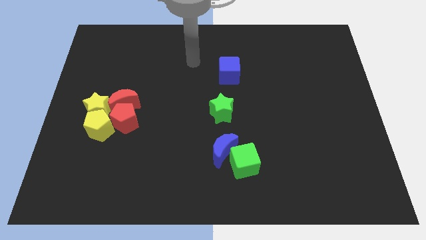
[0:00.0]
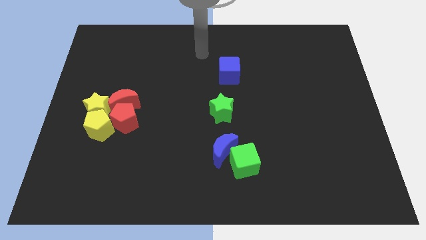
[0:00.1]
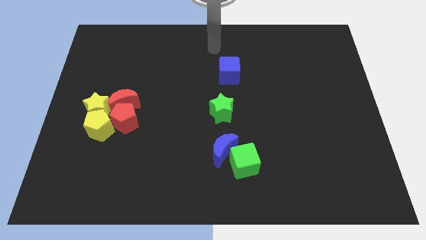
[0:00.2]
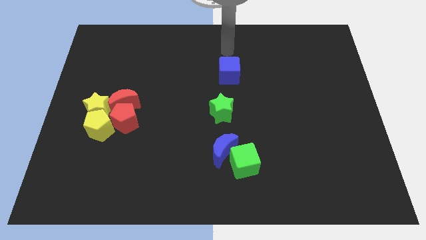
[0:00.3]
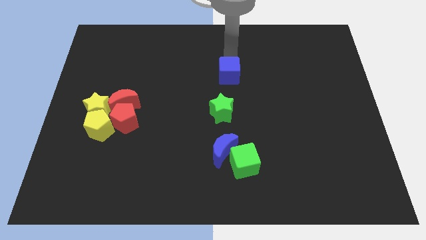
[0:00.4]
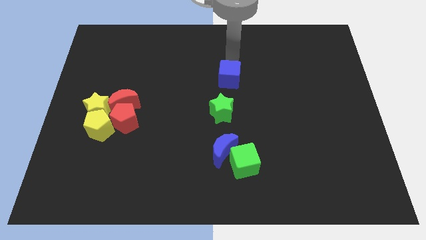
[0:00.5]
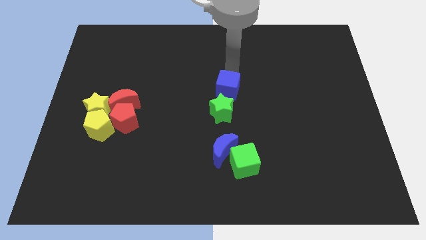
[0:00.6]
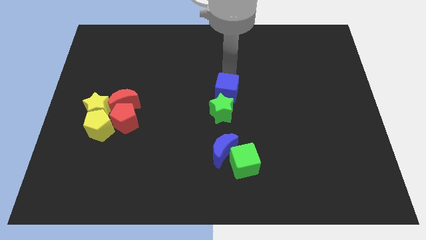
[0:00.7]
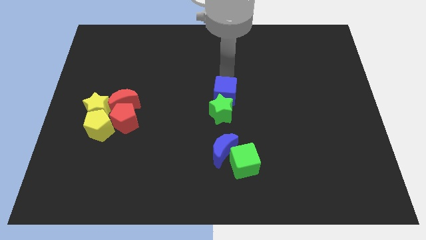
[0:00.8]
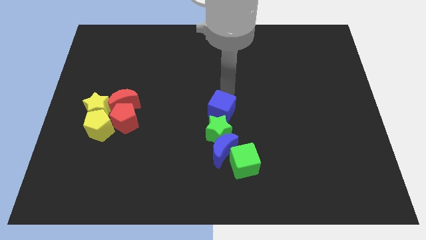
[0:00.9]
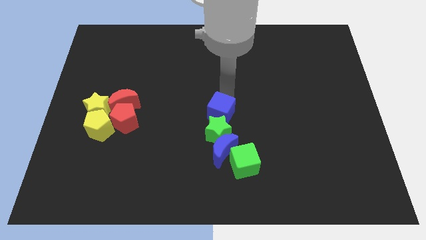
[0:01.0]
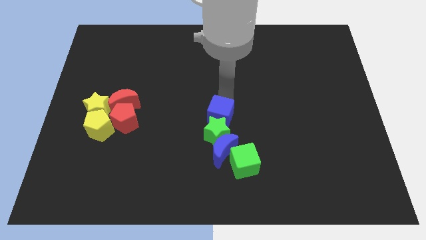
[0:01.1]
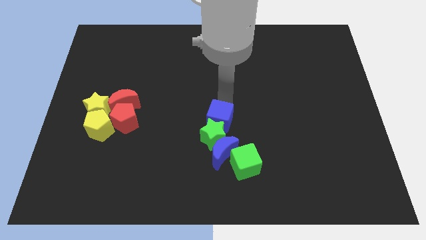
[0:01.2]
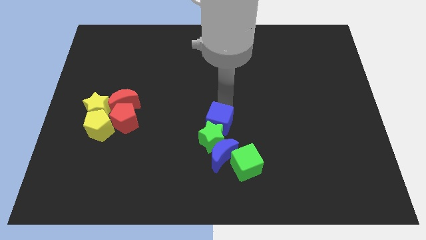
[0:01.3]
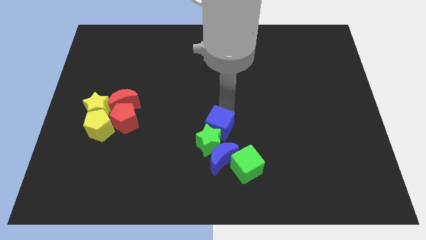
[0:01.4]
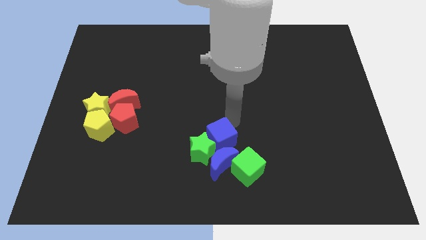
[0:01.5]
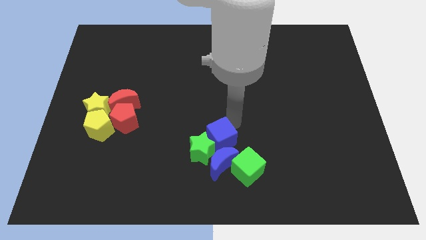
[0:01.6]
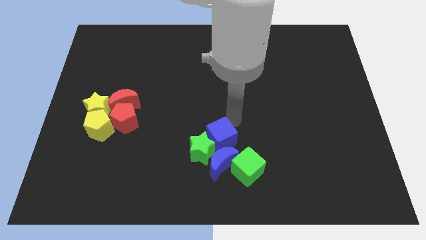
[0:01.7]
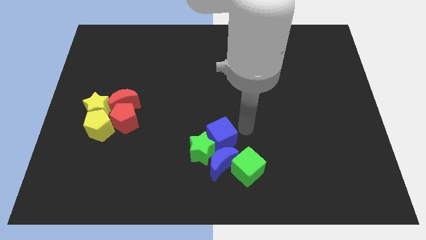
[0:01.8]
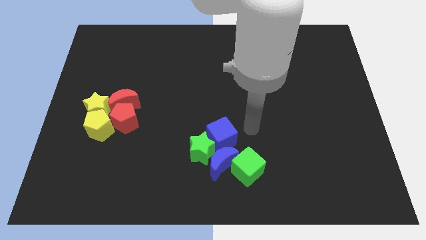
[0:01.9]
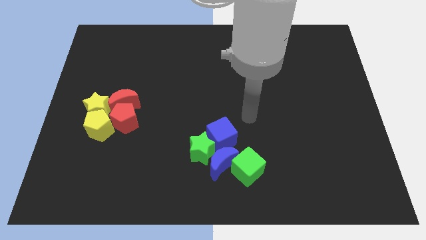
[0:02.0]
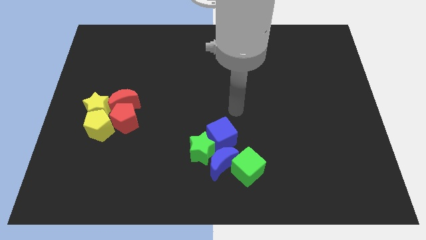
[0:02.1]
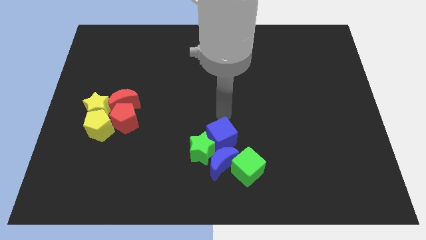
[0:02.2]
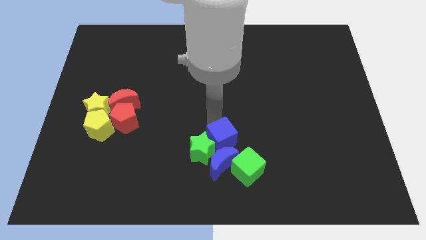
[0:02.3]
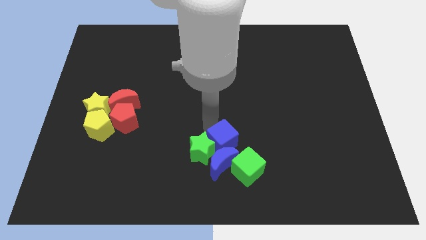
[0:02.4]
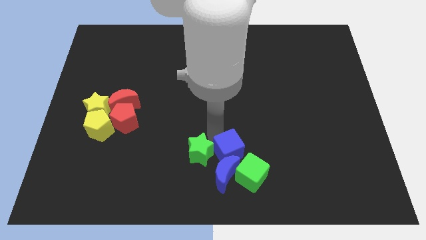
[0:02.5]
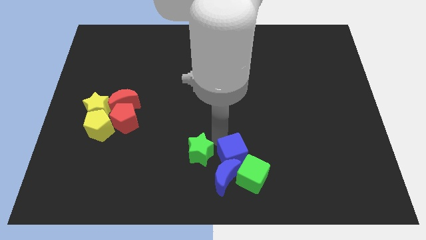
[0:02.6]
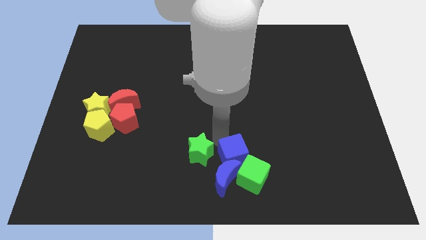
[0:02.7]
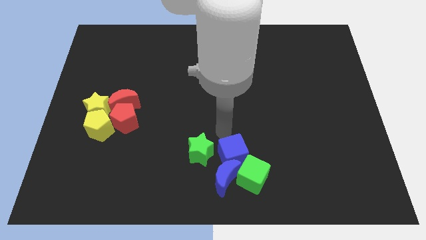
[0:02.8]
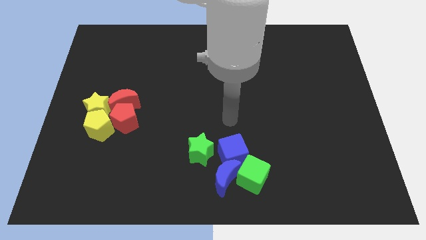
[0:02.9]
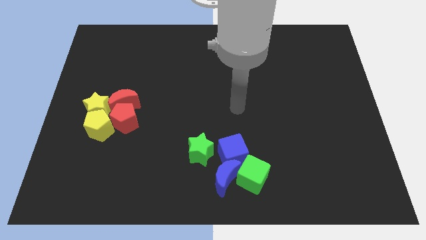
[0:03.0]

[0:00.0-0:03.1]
push the blue cube into the blue crescent

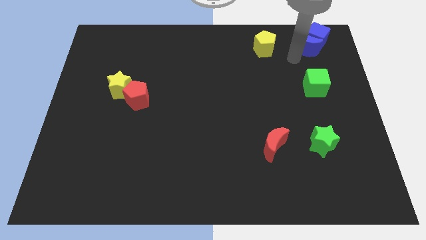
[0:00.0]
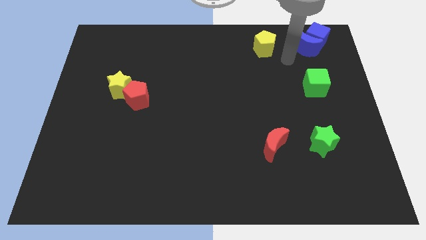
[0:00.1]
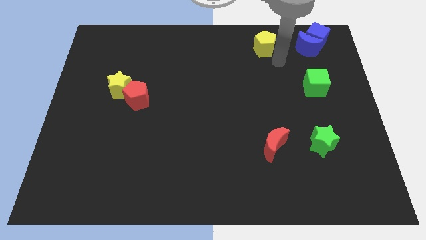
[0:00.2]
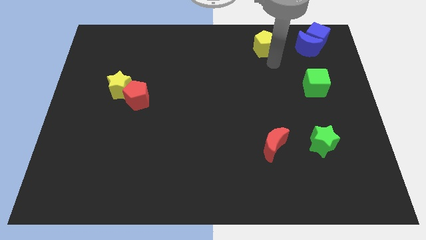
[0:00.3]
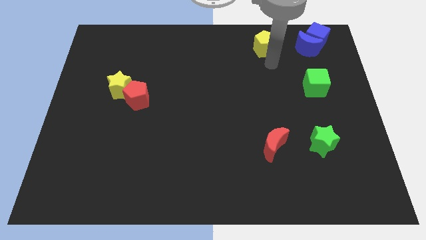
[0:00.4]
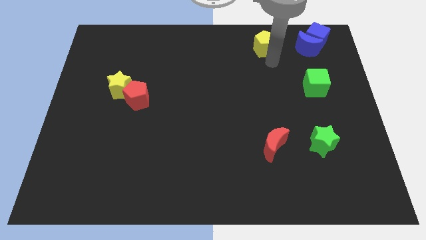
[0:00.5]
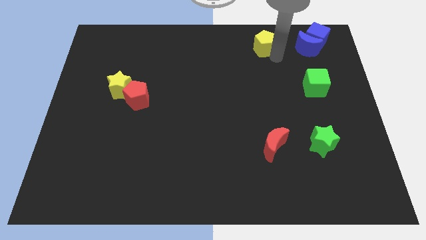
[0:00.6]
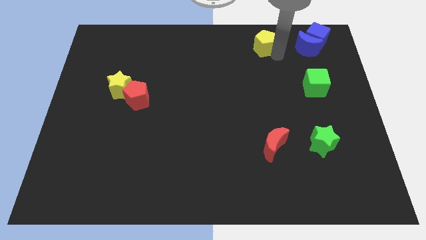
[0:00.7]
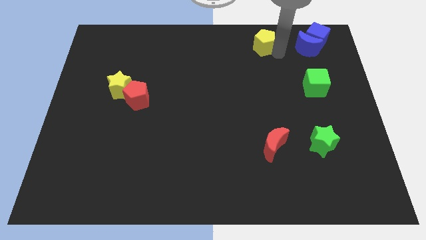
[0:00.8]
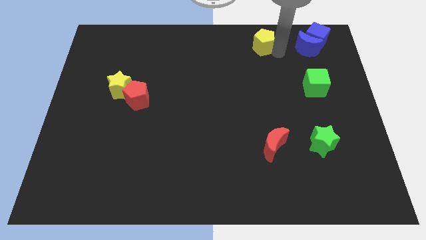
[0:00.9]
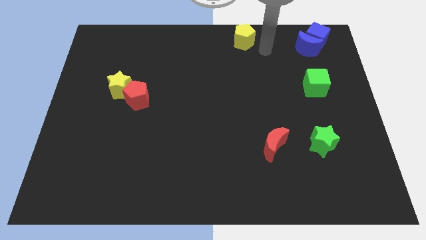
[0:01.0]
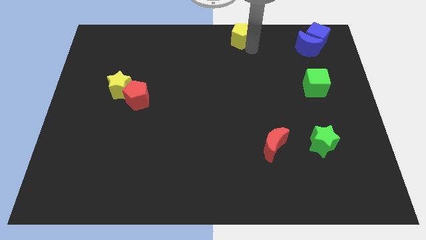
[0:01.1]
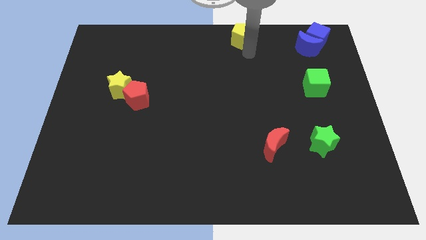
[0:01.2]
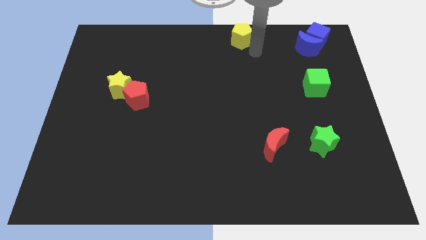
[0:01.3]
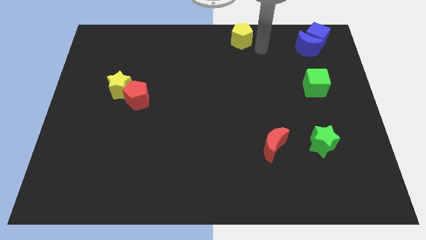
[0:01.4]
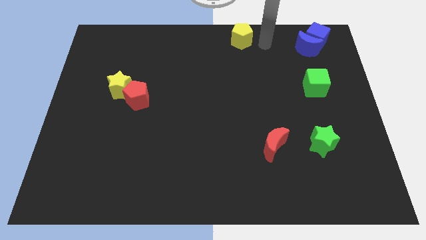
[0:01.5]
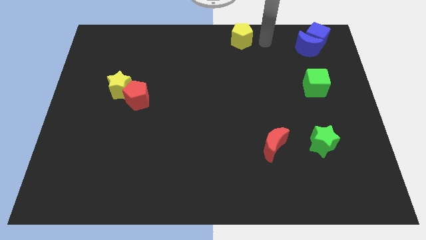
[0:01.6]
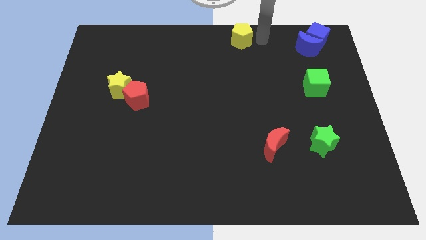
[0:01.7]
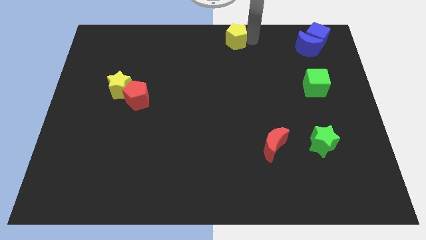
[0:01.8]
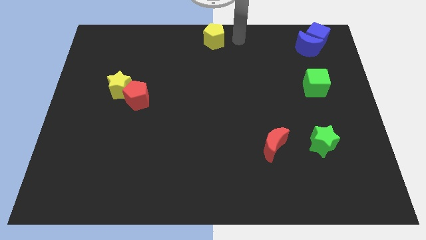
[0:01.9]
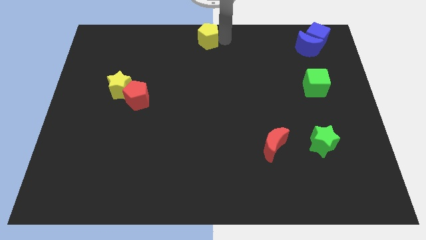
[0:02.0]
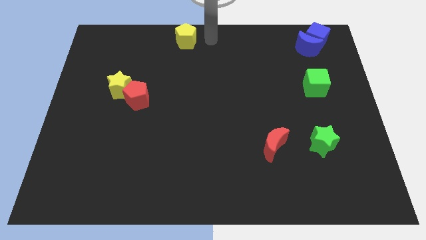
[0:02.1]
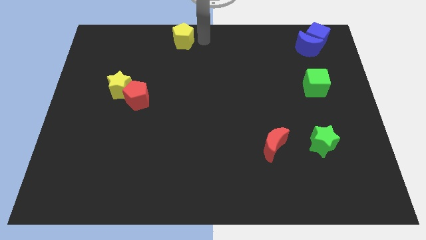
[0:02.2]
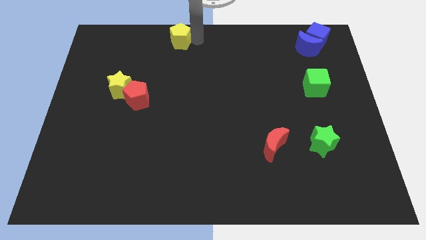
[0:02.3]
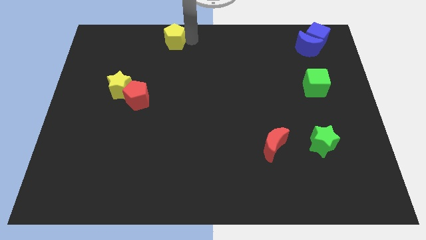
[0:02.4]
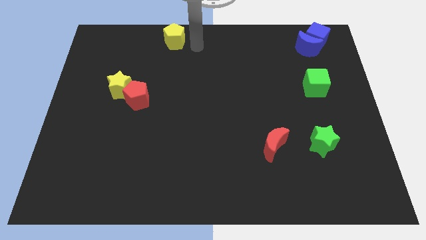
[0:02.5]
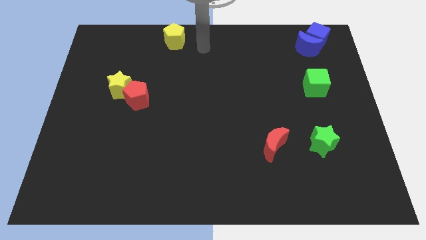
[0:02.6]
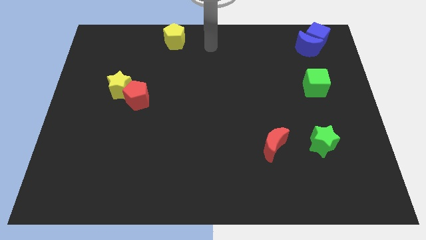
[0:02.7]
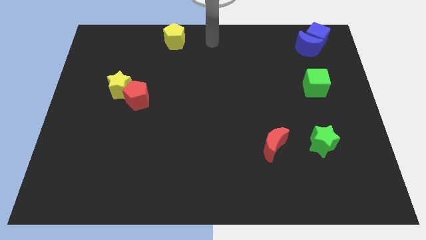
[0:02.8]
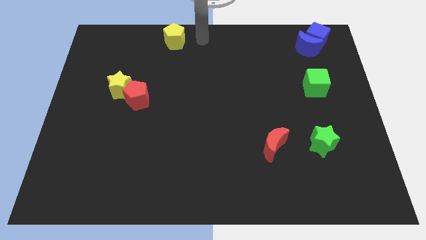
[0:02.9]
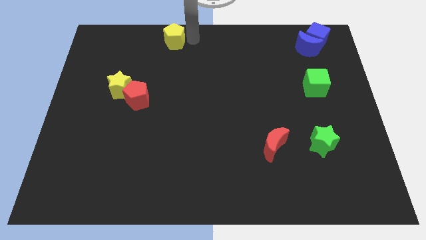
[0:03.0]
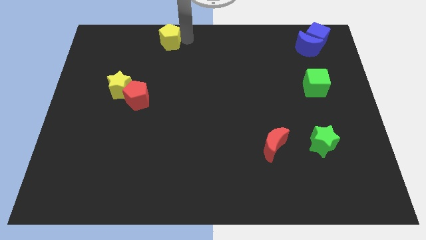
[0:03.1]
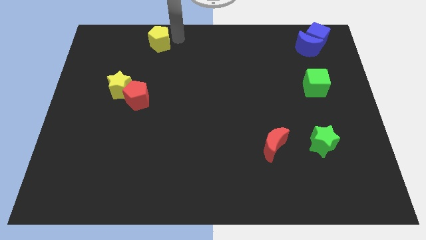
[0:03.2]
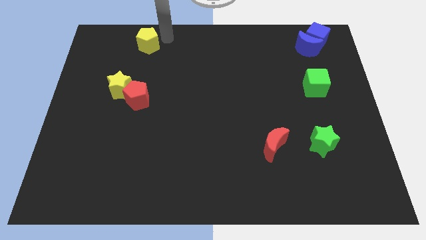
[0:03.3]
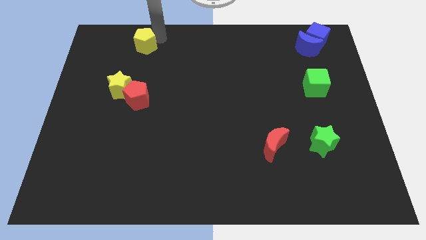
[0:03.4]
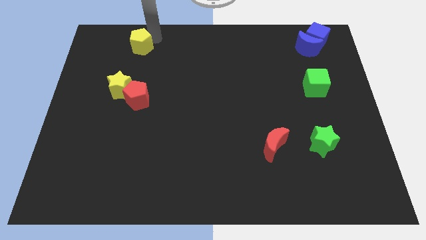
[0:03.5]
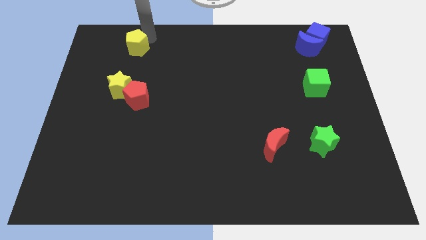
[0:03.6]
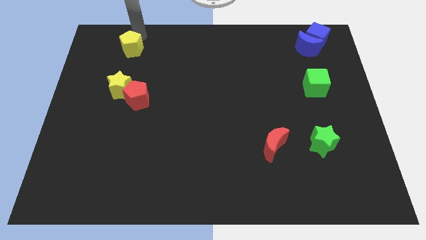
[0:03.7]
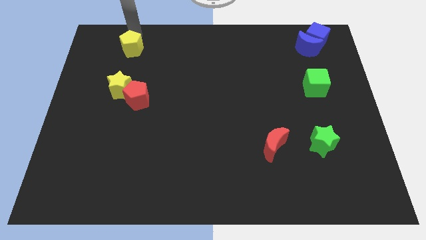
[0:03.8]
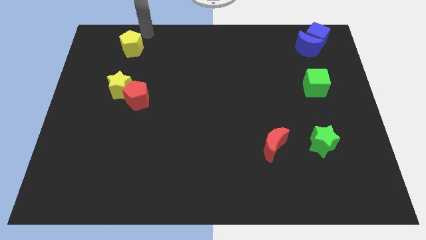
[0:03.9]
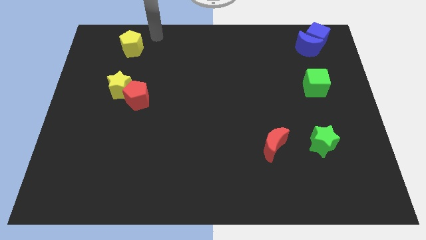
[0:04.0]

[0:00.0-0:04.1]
place yellow pentagon above the yellow star

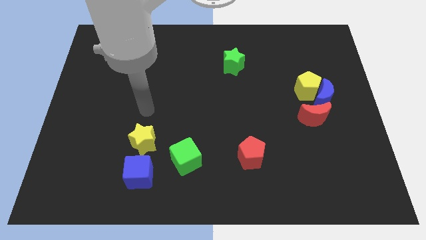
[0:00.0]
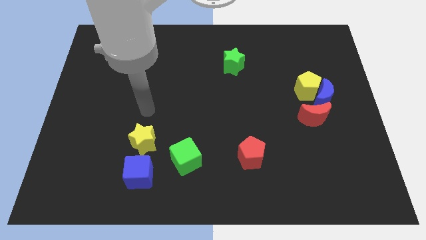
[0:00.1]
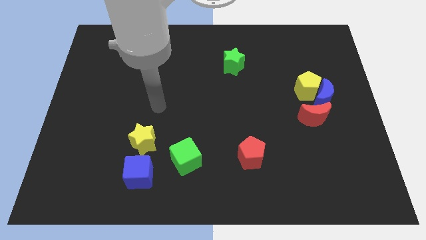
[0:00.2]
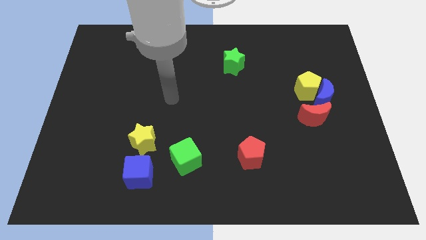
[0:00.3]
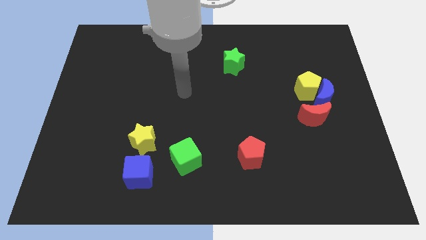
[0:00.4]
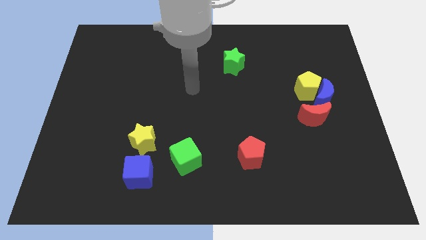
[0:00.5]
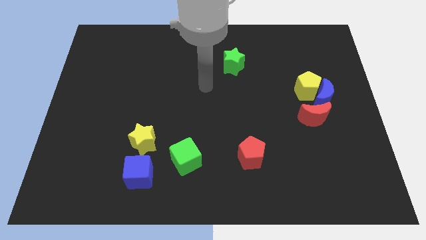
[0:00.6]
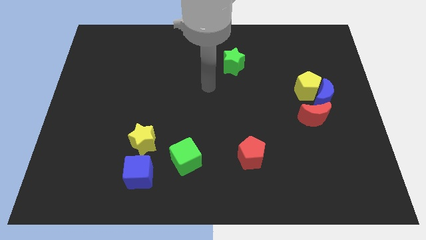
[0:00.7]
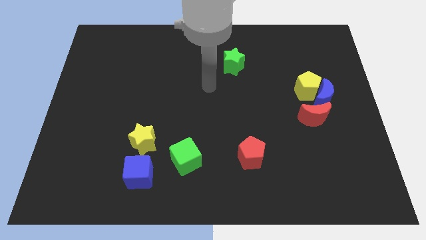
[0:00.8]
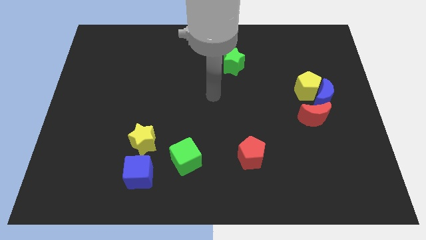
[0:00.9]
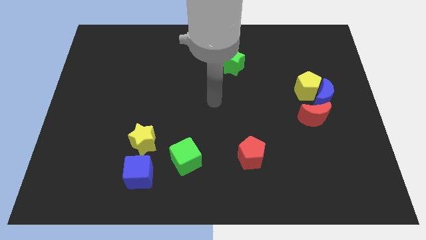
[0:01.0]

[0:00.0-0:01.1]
point your arm at the center of the board

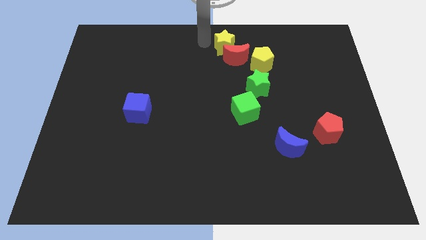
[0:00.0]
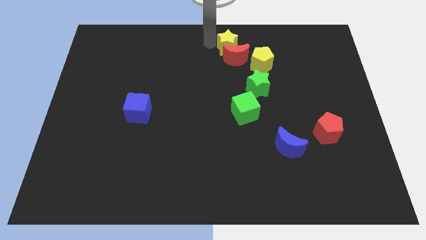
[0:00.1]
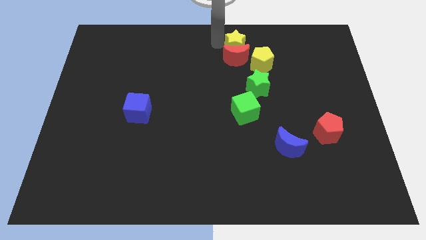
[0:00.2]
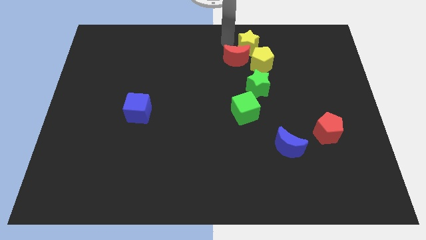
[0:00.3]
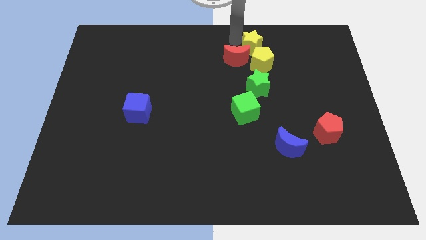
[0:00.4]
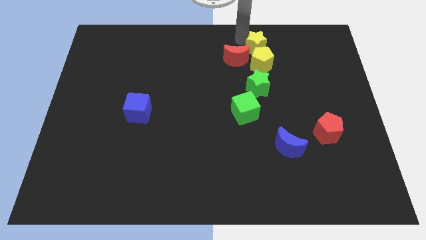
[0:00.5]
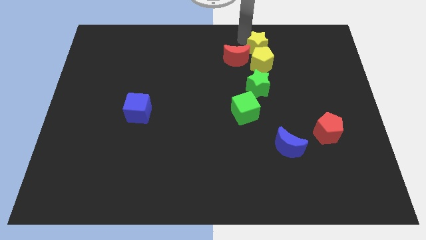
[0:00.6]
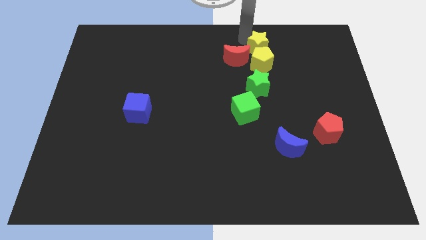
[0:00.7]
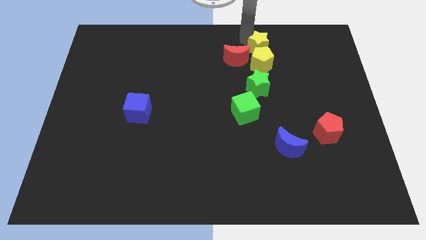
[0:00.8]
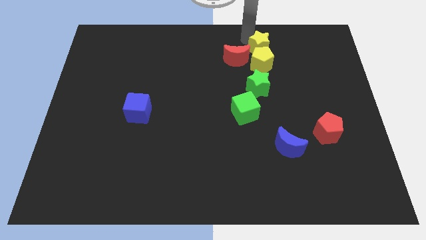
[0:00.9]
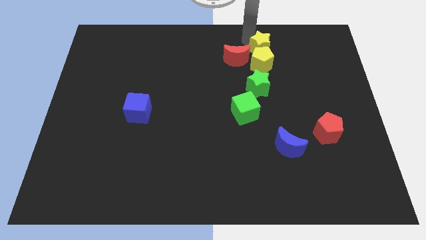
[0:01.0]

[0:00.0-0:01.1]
place the yellow star at the top of yellow pentagon
